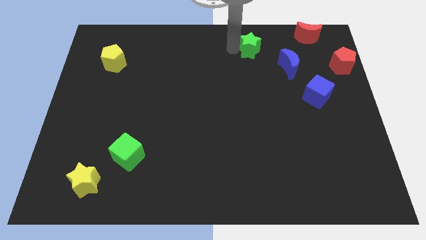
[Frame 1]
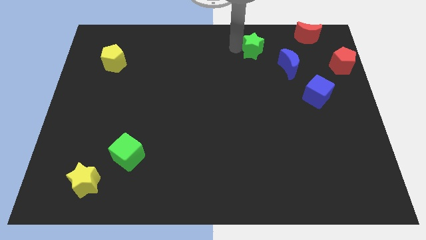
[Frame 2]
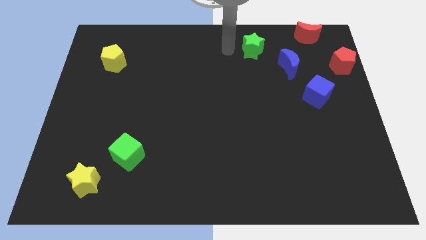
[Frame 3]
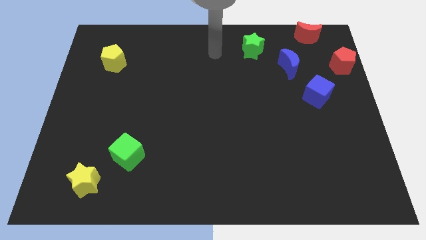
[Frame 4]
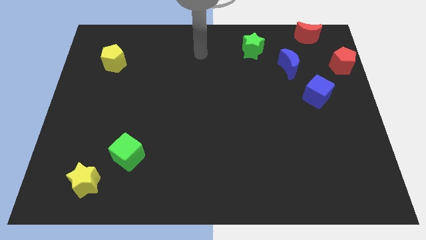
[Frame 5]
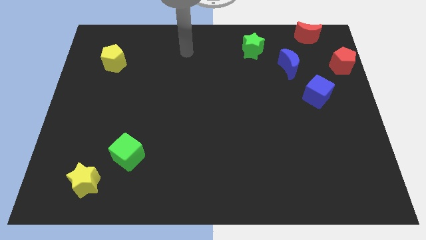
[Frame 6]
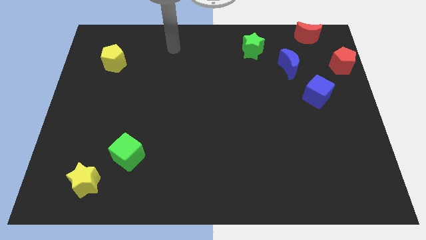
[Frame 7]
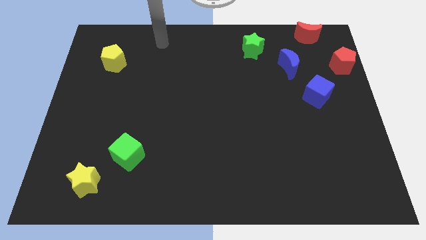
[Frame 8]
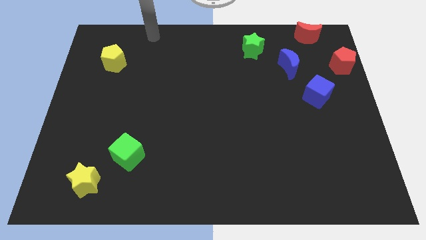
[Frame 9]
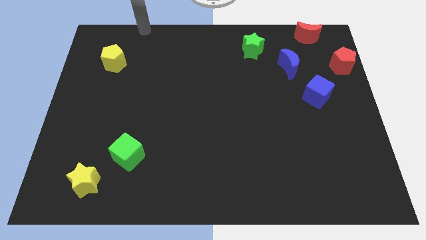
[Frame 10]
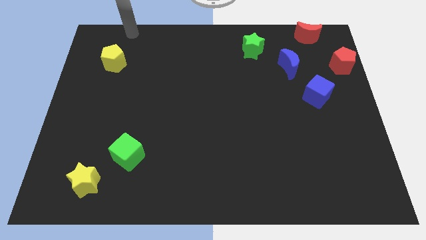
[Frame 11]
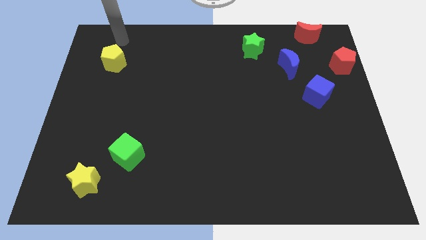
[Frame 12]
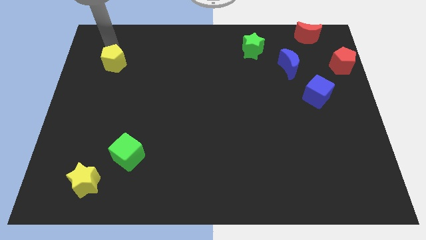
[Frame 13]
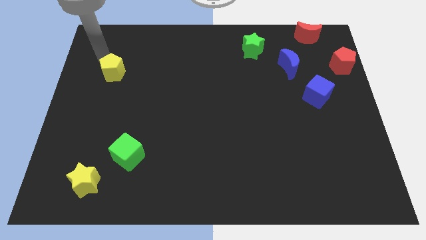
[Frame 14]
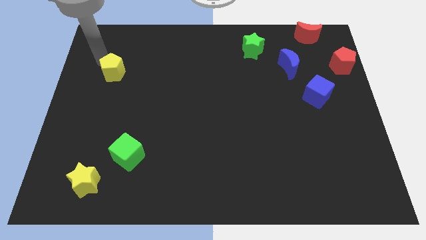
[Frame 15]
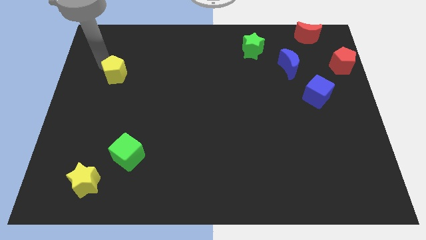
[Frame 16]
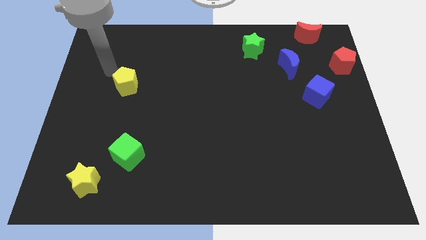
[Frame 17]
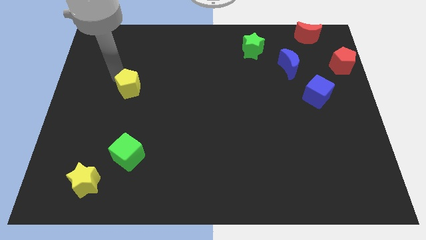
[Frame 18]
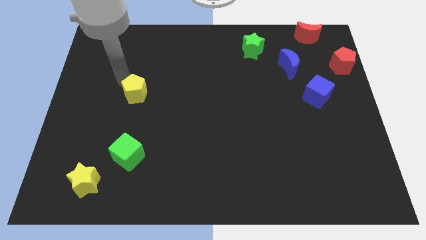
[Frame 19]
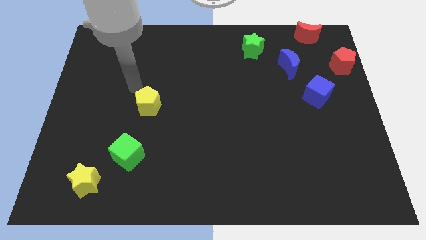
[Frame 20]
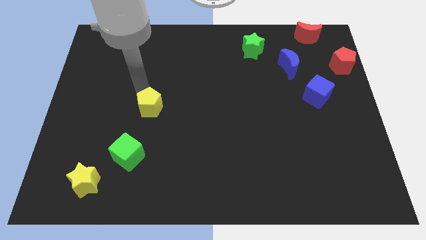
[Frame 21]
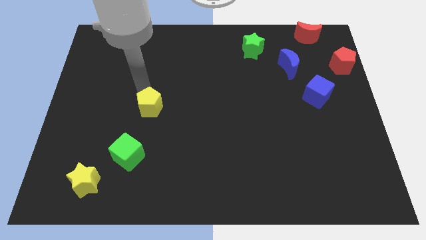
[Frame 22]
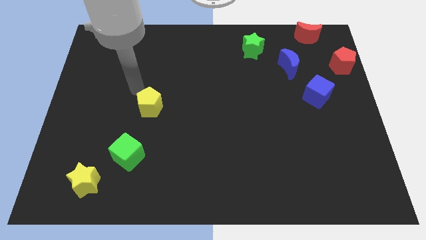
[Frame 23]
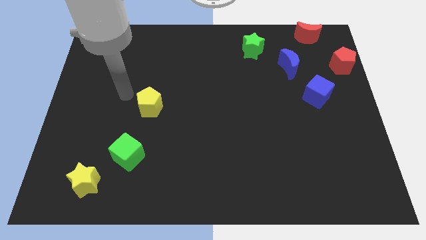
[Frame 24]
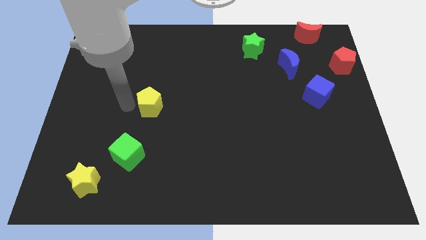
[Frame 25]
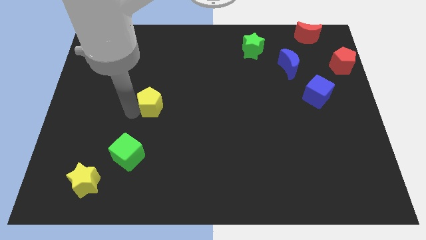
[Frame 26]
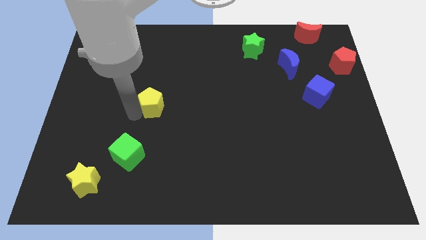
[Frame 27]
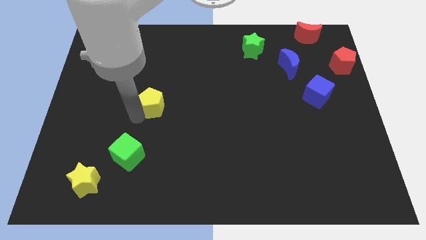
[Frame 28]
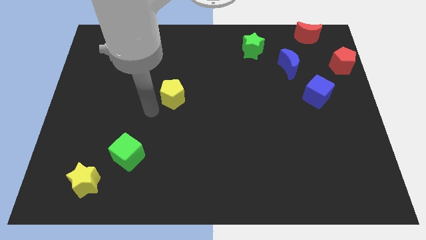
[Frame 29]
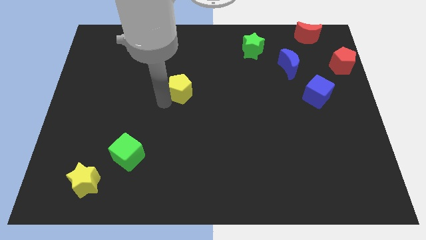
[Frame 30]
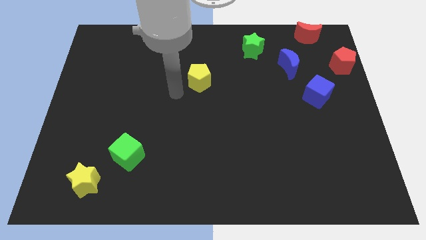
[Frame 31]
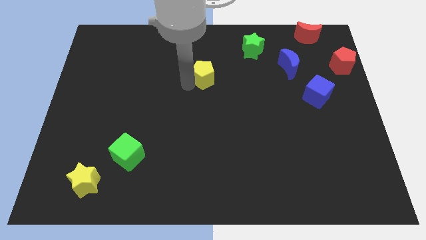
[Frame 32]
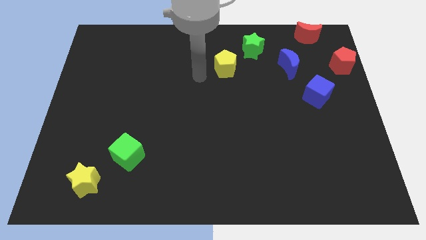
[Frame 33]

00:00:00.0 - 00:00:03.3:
place the yellow pentagon left to the blue moon

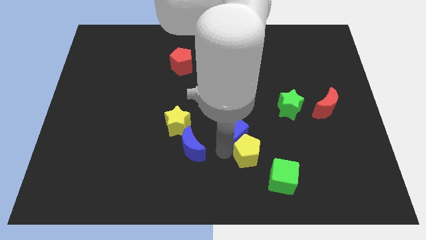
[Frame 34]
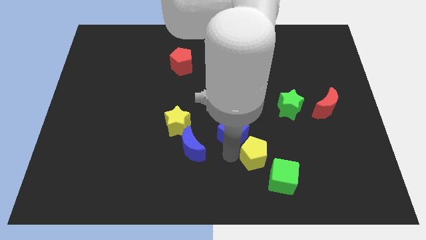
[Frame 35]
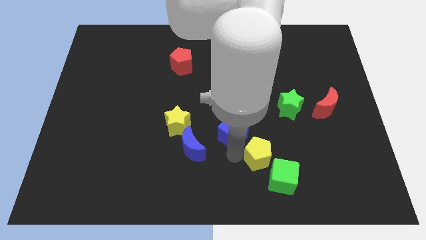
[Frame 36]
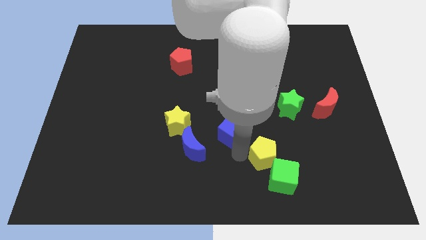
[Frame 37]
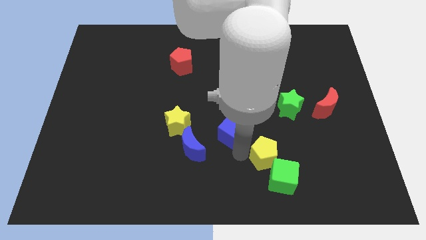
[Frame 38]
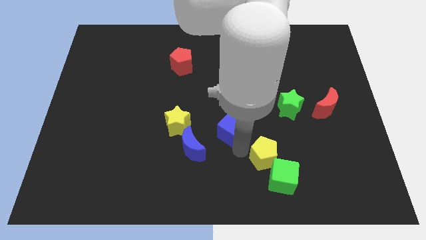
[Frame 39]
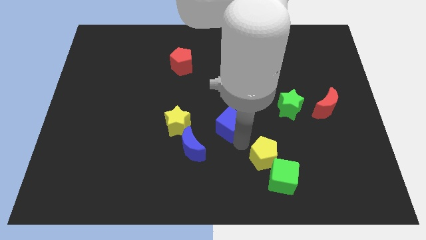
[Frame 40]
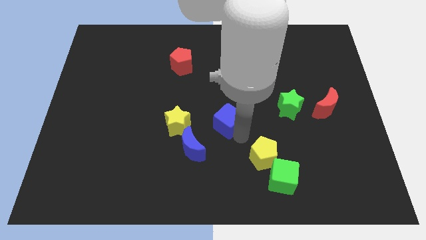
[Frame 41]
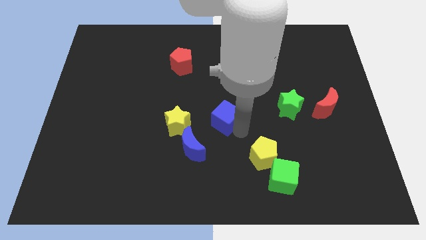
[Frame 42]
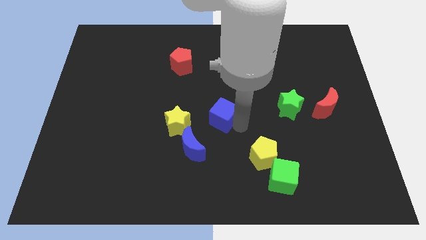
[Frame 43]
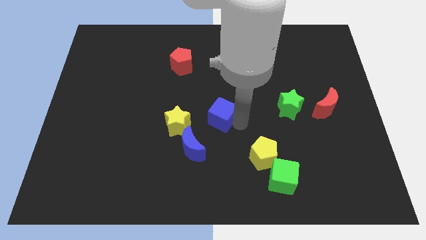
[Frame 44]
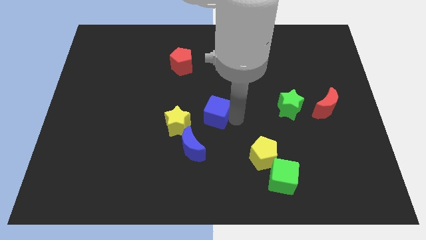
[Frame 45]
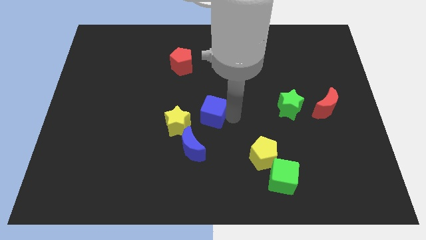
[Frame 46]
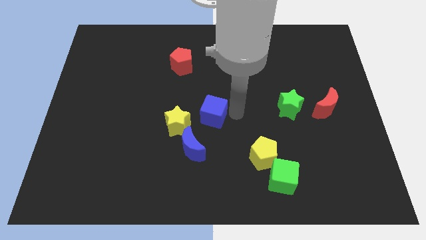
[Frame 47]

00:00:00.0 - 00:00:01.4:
slightly move the blue cube up

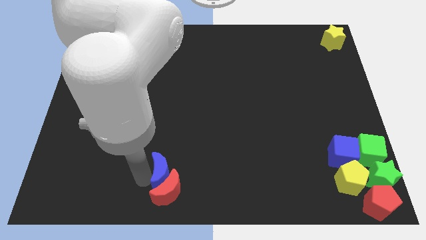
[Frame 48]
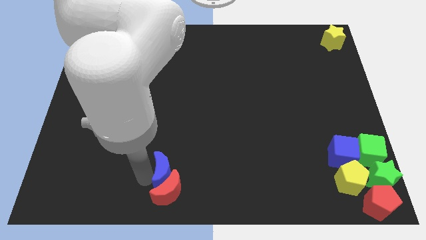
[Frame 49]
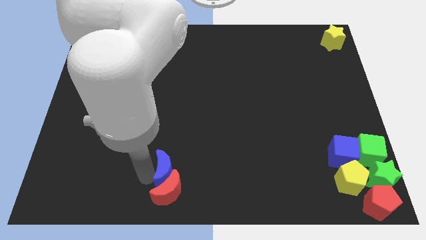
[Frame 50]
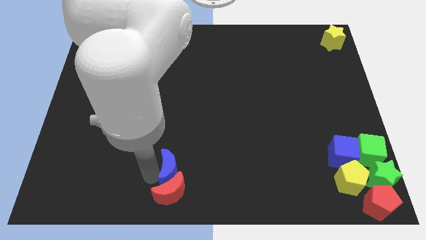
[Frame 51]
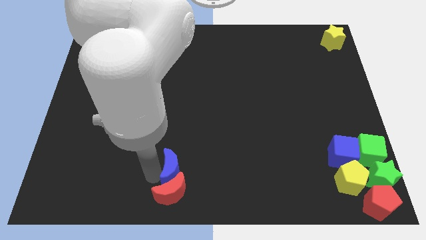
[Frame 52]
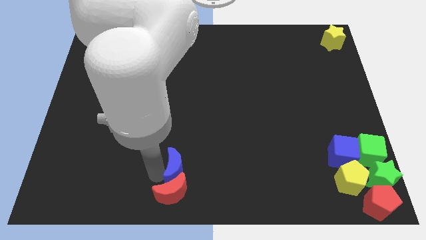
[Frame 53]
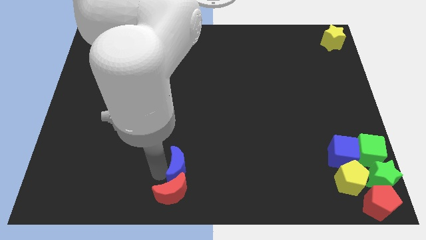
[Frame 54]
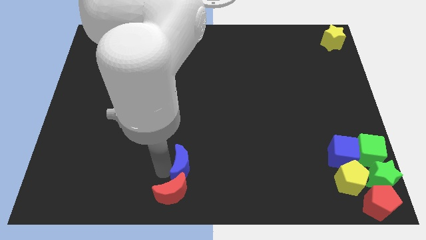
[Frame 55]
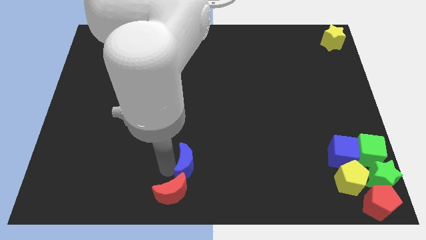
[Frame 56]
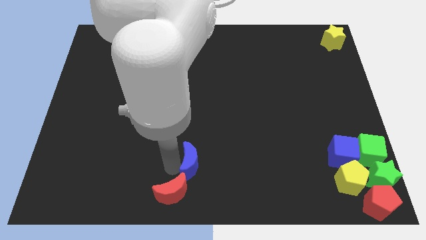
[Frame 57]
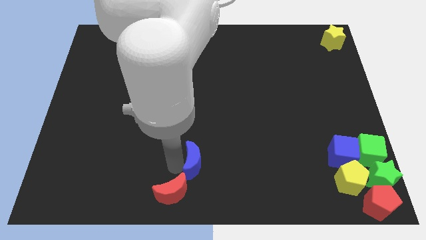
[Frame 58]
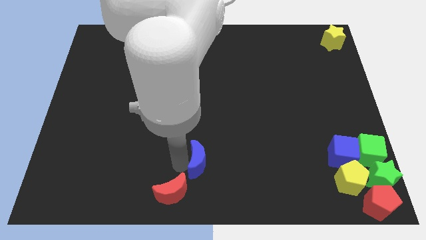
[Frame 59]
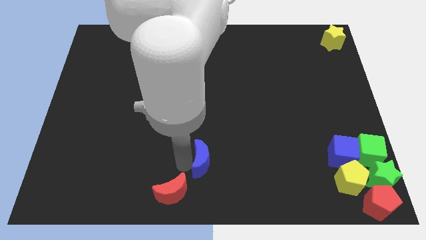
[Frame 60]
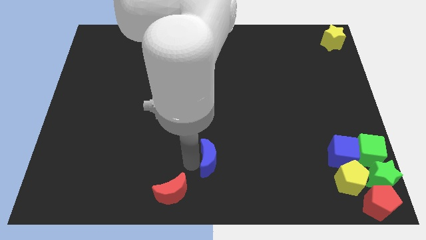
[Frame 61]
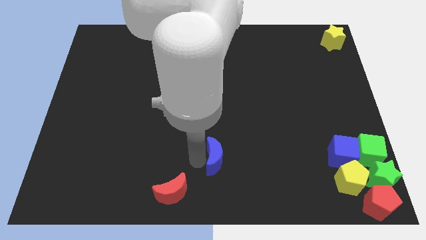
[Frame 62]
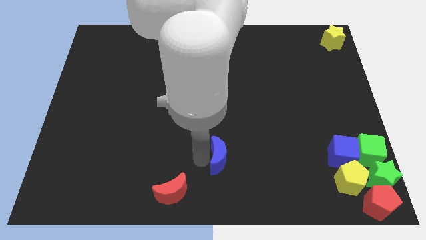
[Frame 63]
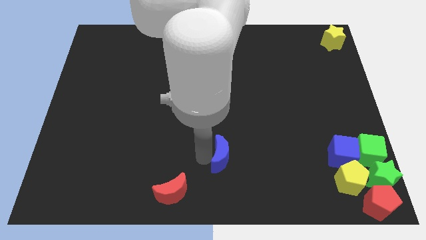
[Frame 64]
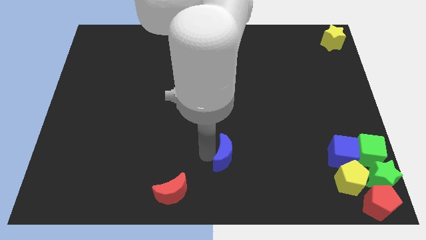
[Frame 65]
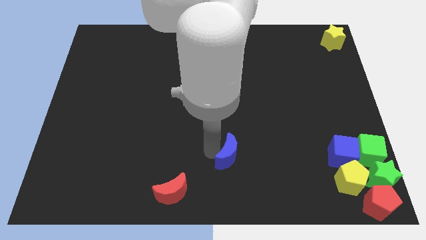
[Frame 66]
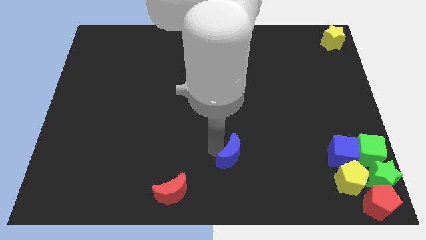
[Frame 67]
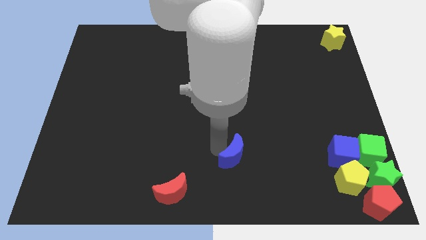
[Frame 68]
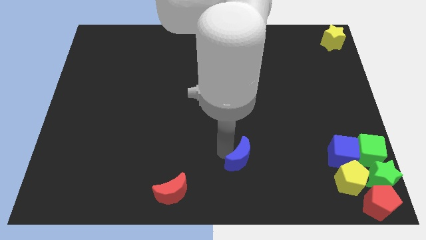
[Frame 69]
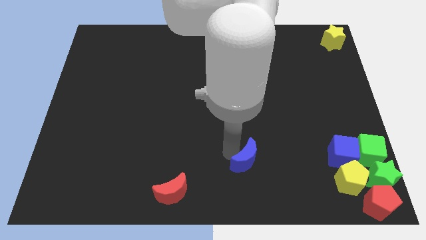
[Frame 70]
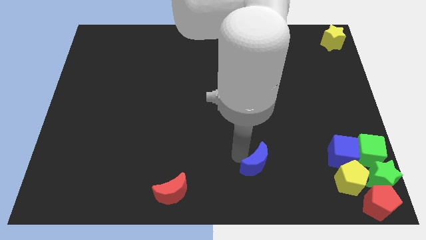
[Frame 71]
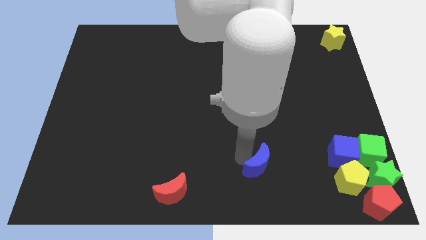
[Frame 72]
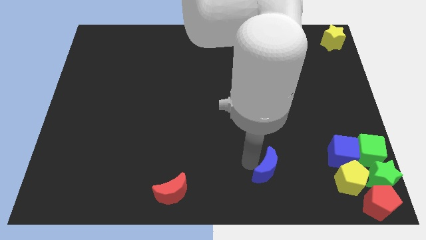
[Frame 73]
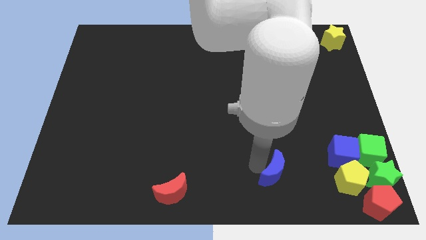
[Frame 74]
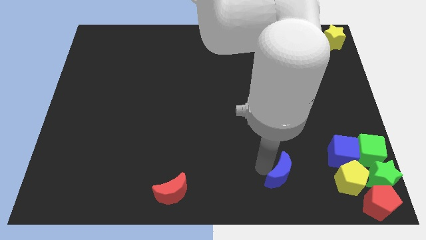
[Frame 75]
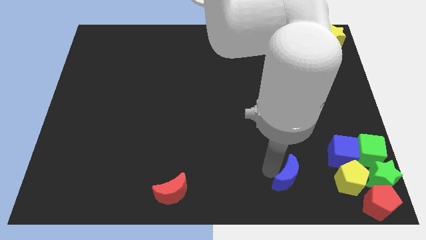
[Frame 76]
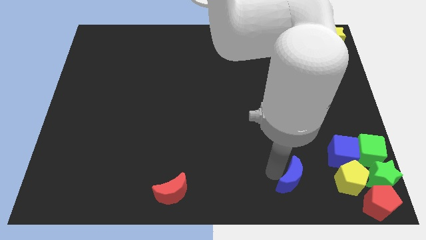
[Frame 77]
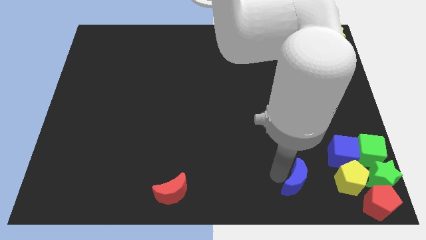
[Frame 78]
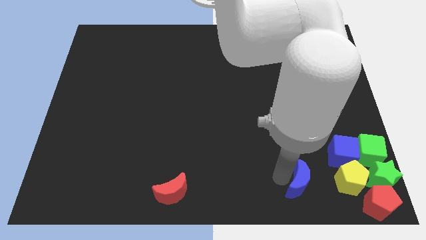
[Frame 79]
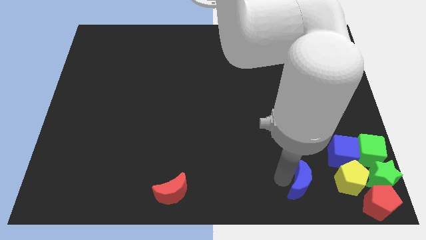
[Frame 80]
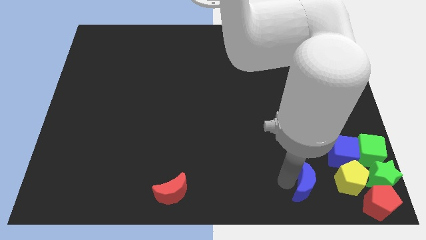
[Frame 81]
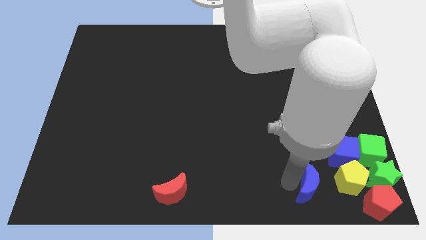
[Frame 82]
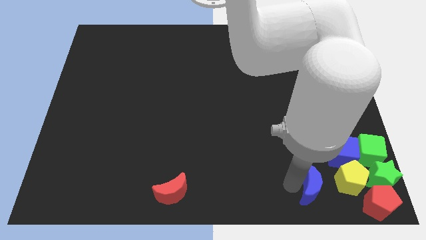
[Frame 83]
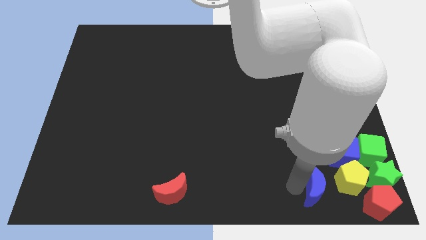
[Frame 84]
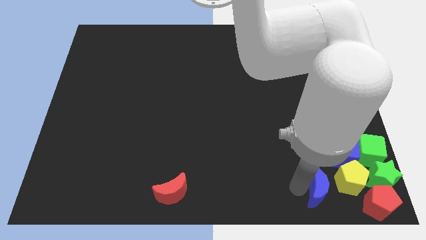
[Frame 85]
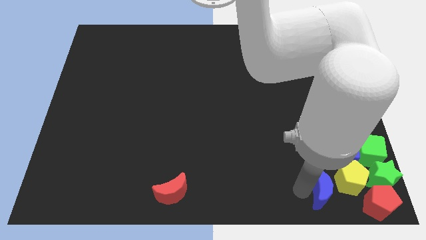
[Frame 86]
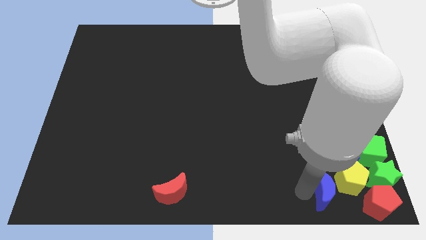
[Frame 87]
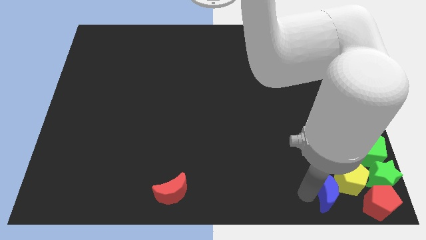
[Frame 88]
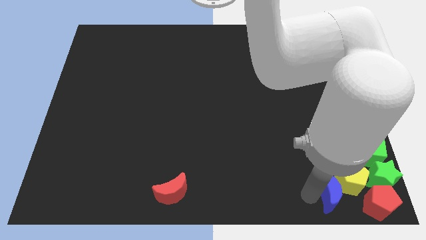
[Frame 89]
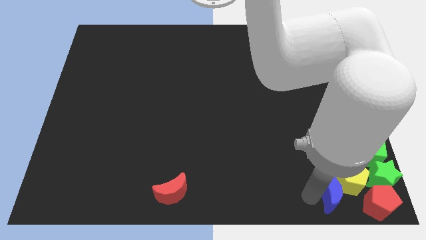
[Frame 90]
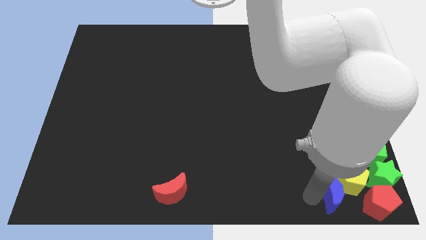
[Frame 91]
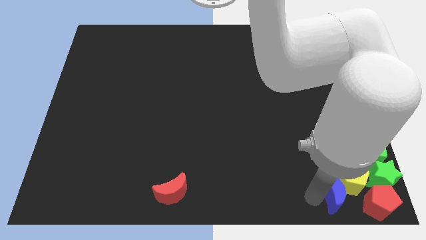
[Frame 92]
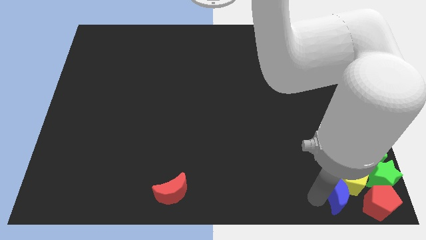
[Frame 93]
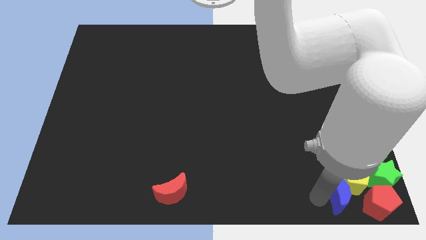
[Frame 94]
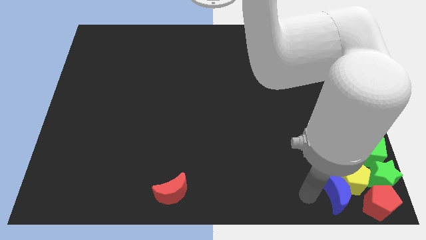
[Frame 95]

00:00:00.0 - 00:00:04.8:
move the blue moon into the group of blocks at the bottom
